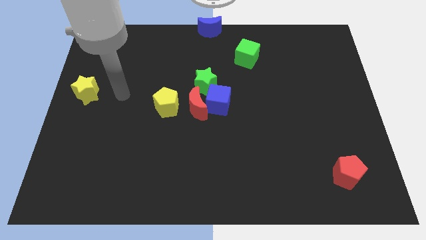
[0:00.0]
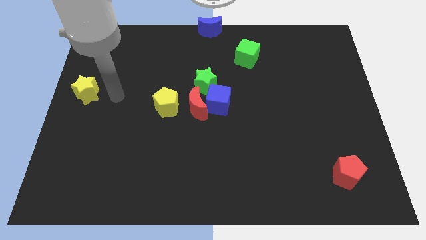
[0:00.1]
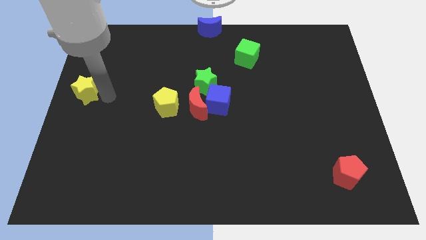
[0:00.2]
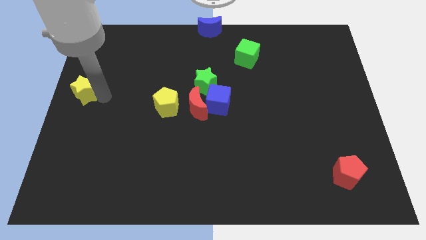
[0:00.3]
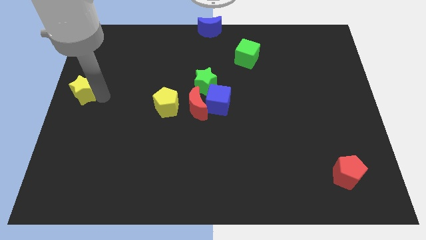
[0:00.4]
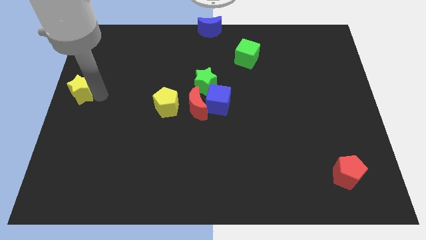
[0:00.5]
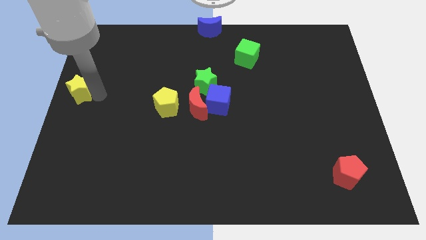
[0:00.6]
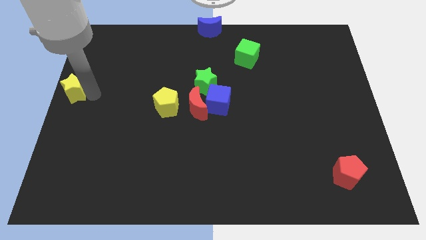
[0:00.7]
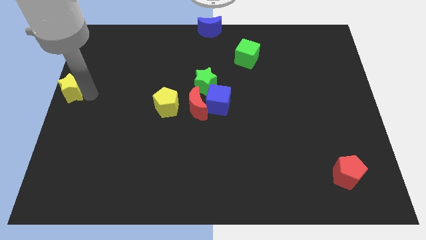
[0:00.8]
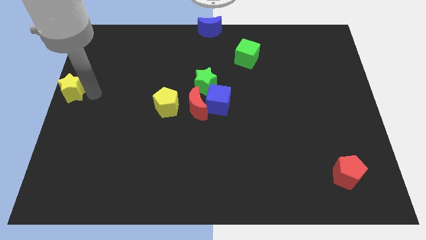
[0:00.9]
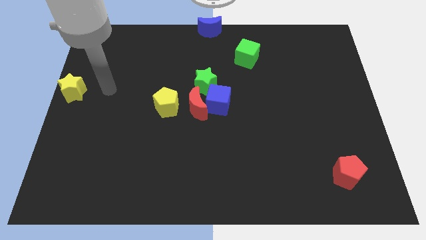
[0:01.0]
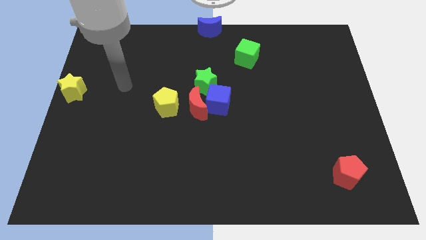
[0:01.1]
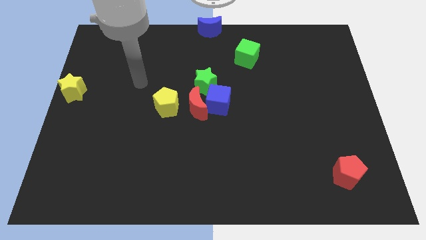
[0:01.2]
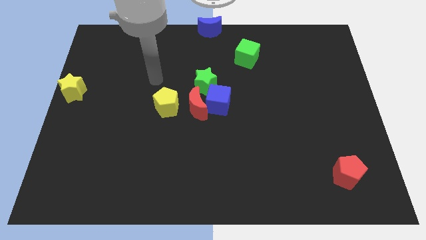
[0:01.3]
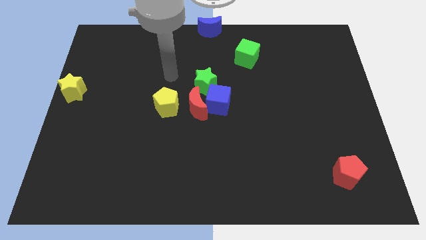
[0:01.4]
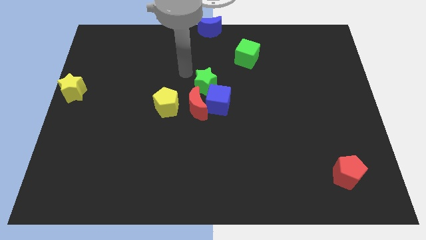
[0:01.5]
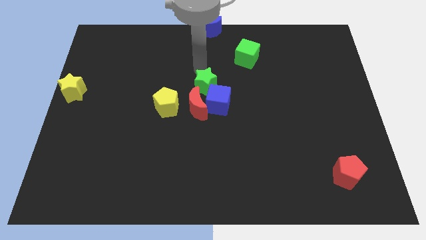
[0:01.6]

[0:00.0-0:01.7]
slightly move yellow star towards the left

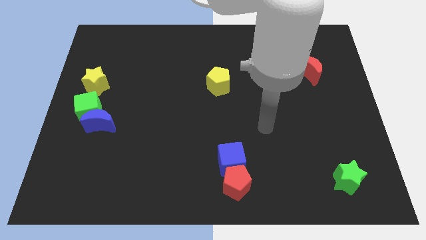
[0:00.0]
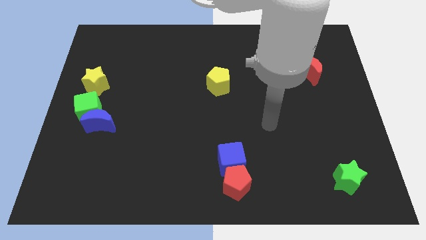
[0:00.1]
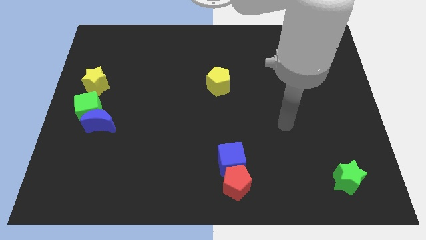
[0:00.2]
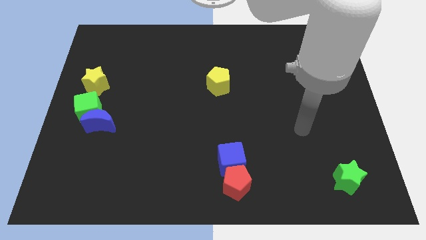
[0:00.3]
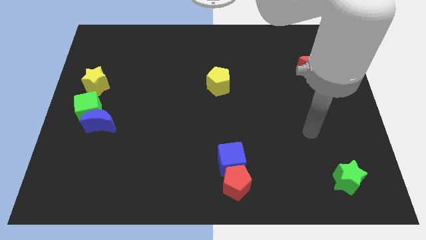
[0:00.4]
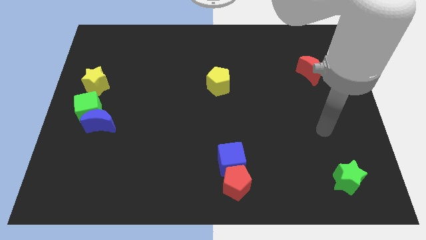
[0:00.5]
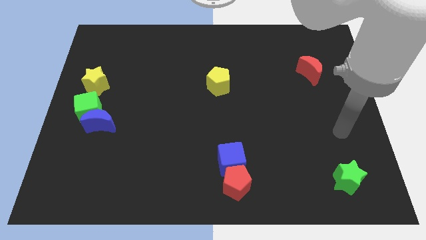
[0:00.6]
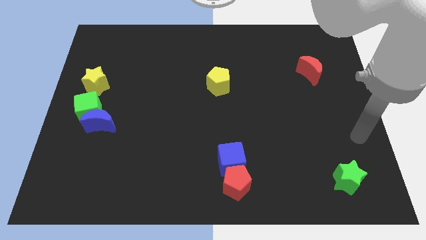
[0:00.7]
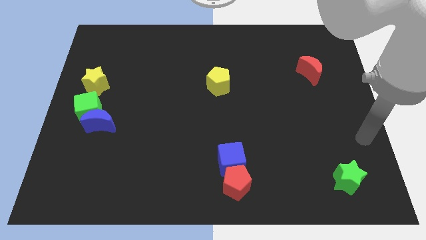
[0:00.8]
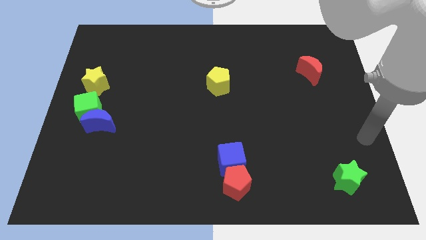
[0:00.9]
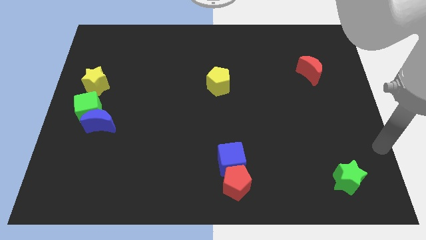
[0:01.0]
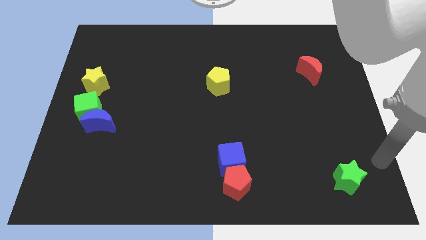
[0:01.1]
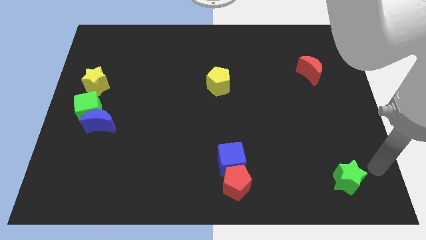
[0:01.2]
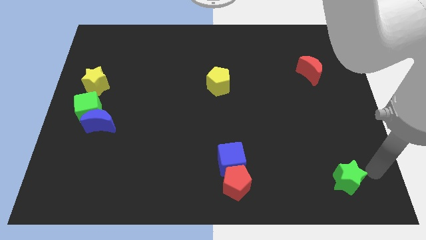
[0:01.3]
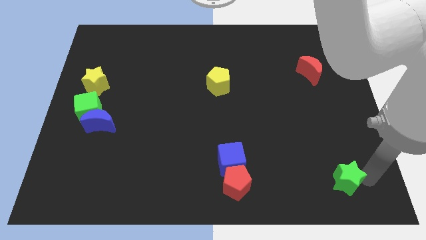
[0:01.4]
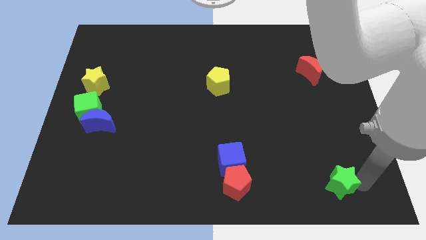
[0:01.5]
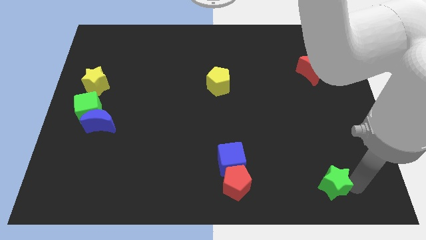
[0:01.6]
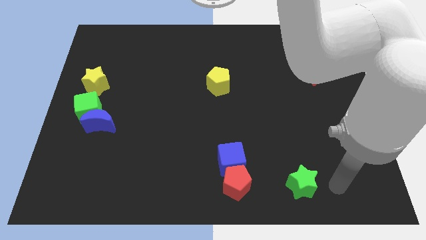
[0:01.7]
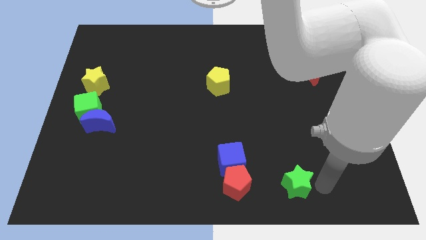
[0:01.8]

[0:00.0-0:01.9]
push the green star towards the red pentagon

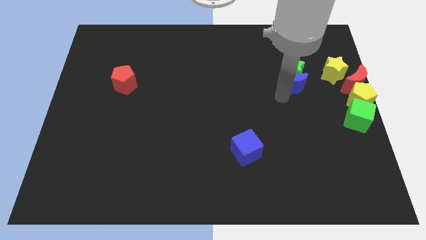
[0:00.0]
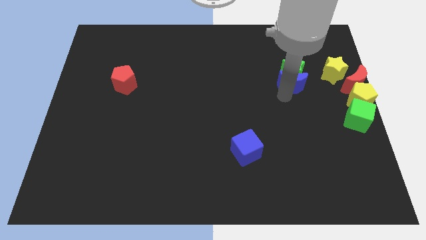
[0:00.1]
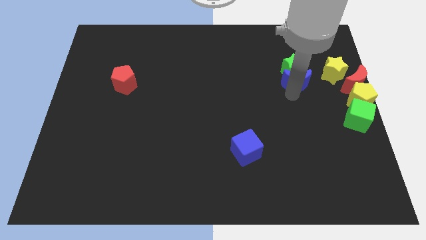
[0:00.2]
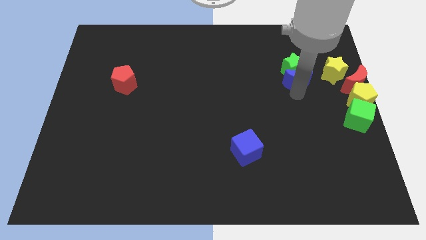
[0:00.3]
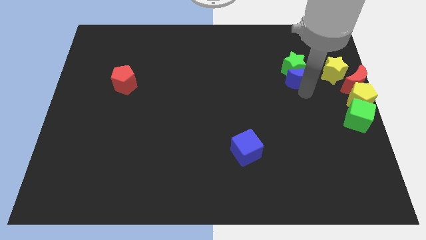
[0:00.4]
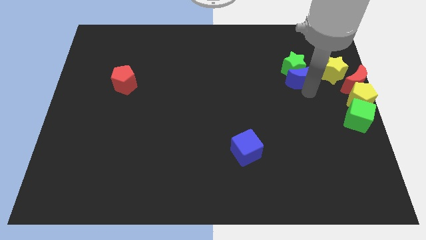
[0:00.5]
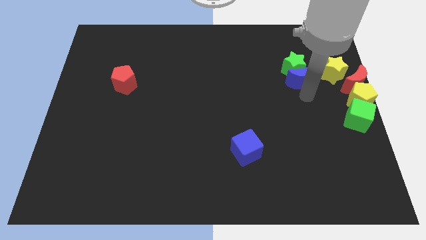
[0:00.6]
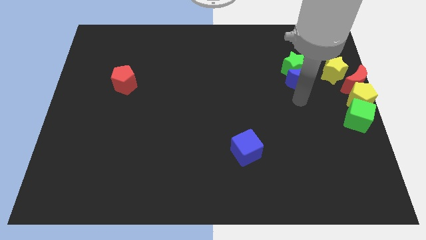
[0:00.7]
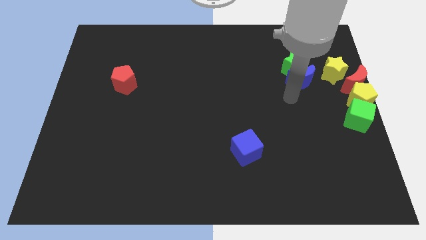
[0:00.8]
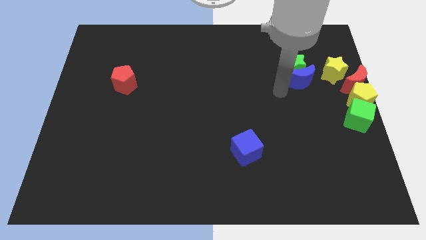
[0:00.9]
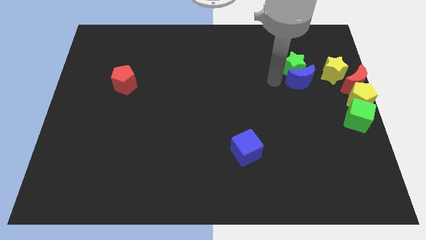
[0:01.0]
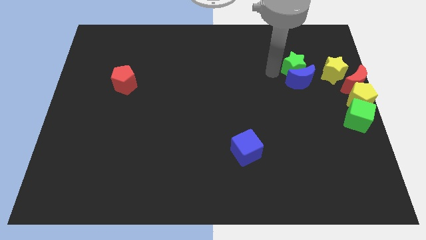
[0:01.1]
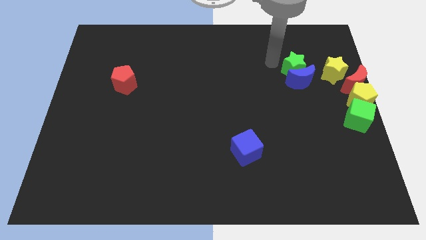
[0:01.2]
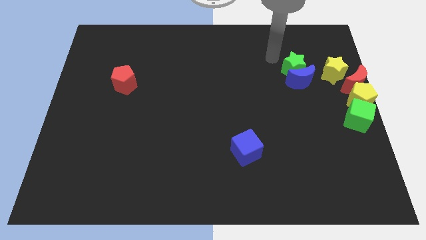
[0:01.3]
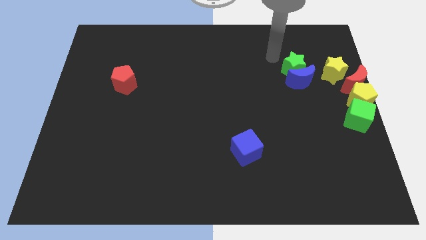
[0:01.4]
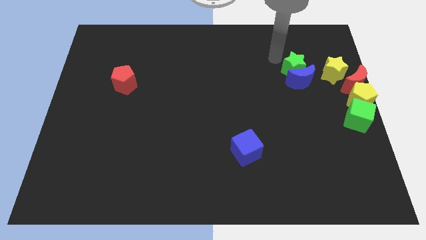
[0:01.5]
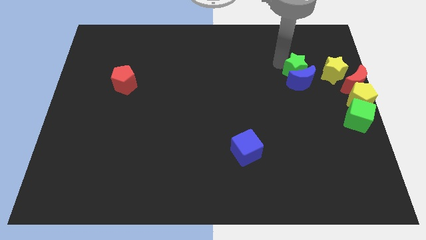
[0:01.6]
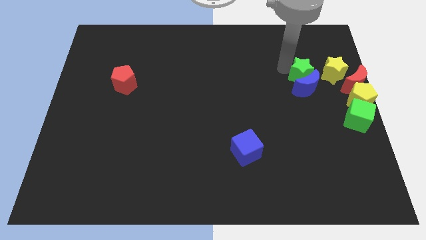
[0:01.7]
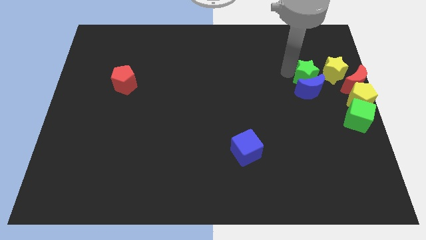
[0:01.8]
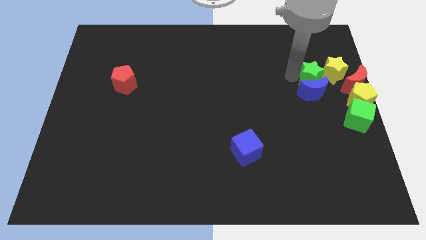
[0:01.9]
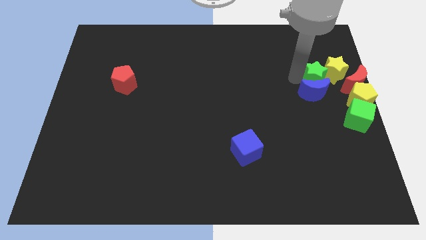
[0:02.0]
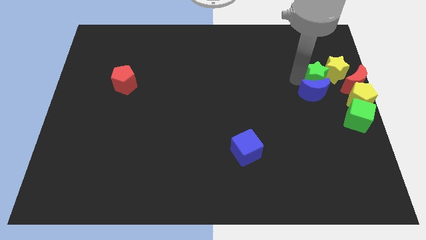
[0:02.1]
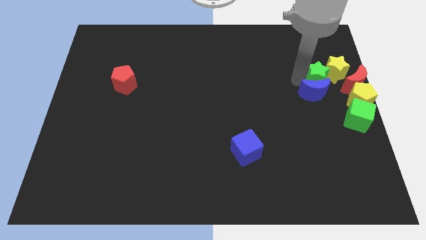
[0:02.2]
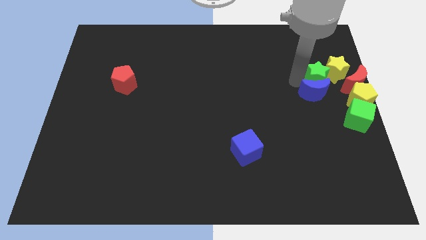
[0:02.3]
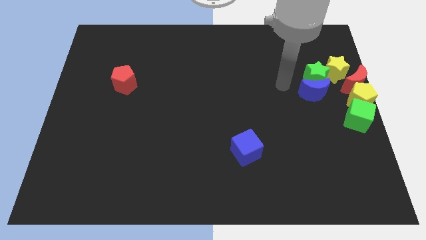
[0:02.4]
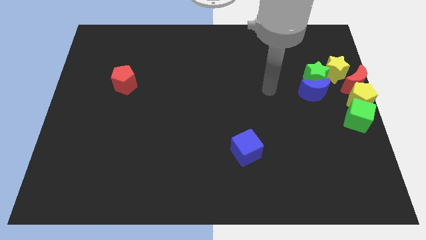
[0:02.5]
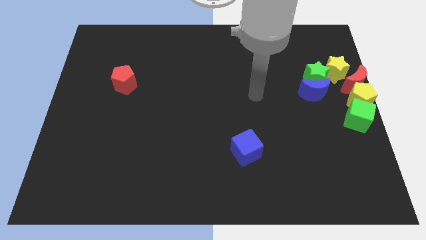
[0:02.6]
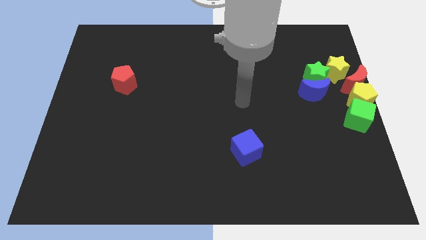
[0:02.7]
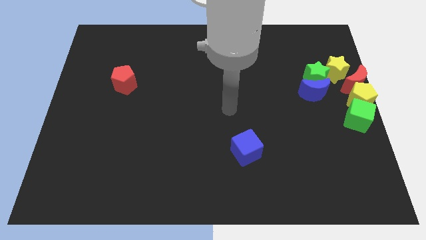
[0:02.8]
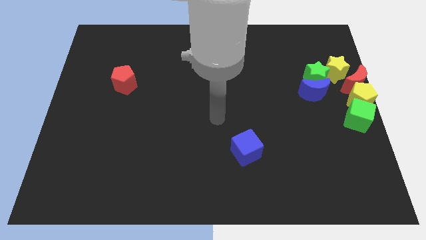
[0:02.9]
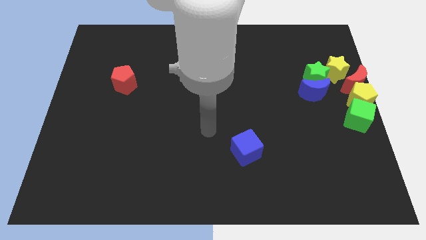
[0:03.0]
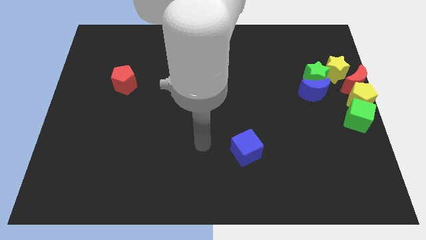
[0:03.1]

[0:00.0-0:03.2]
place green star to the bottom left of yellow star

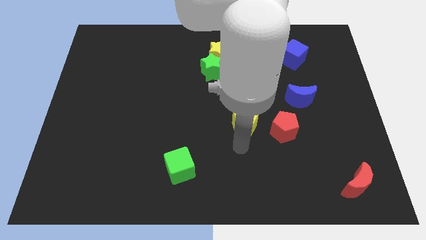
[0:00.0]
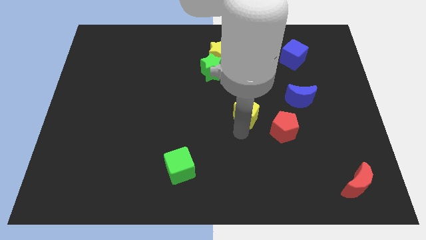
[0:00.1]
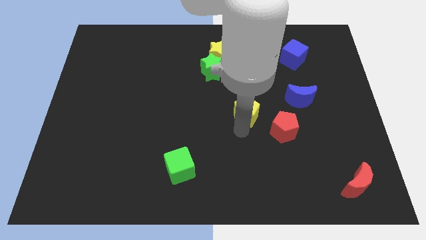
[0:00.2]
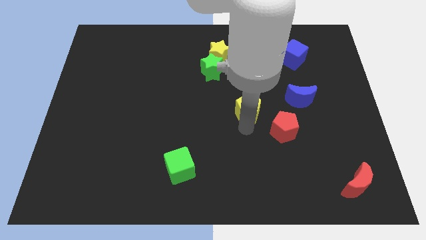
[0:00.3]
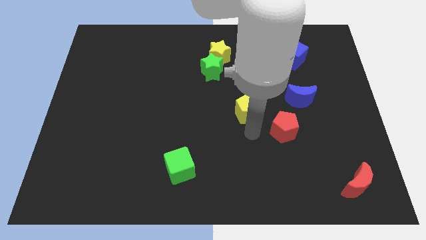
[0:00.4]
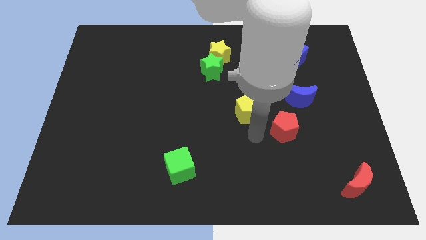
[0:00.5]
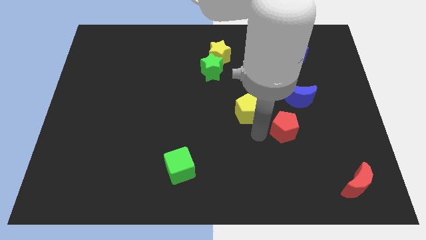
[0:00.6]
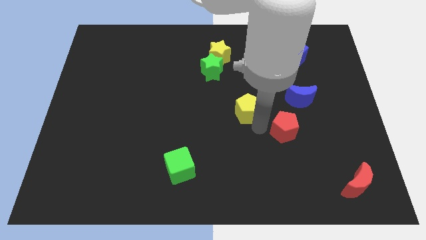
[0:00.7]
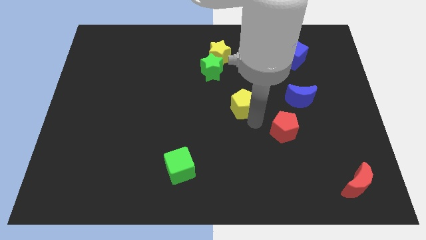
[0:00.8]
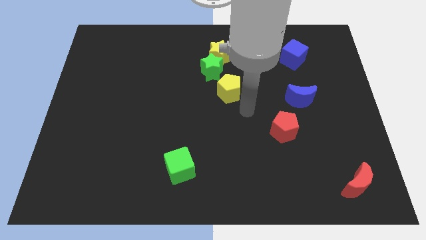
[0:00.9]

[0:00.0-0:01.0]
push the yellow pentagon parallel to the blue moon

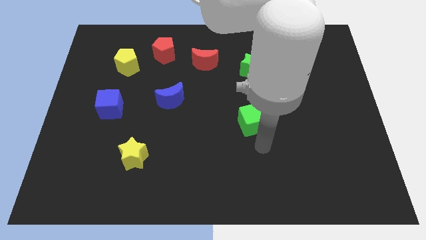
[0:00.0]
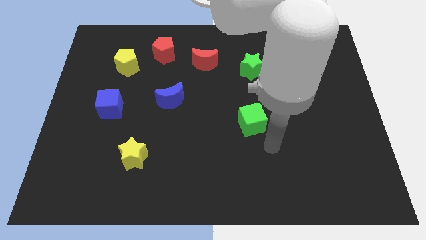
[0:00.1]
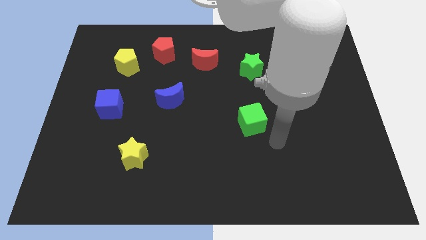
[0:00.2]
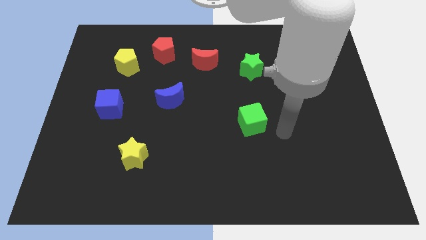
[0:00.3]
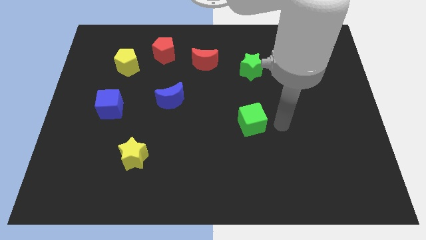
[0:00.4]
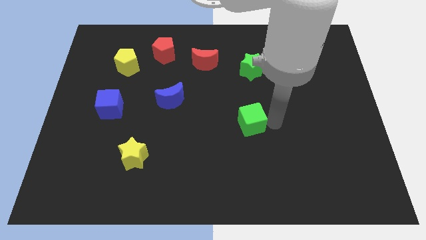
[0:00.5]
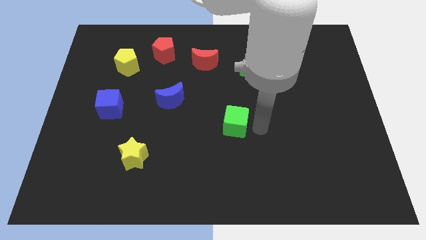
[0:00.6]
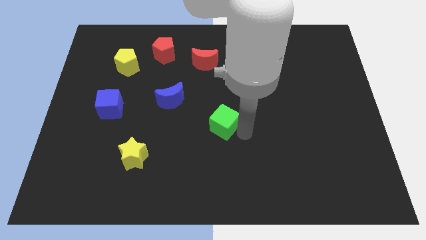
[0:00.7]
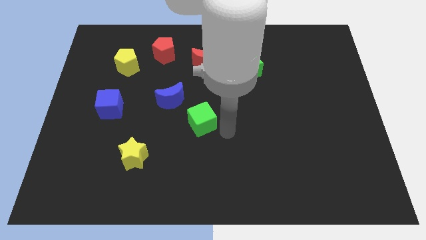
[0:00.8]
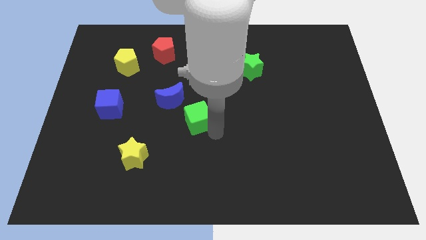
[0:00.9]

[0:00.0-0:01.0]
move the green cube in between the green star and the yellow star
